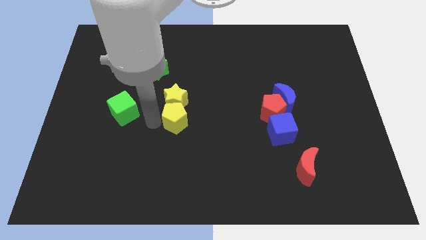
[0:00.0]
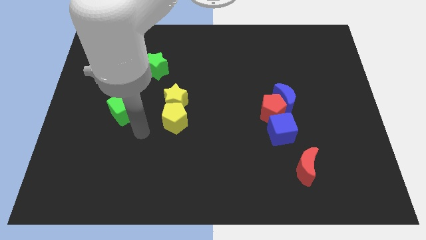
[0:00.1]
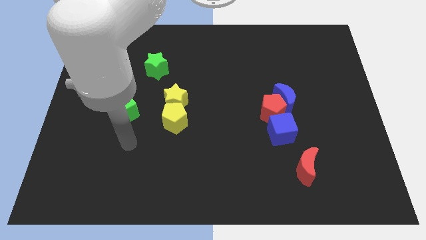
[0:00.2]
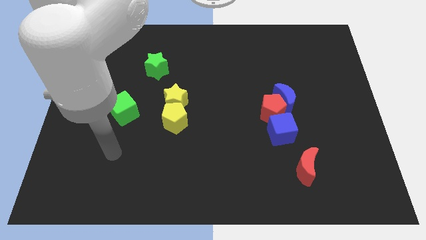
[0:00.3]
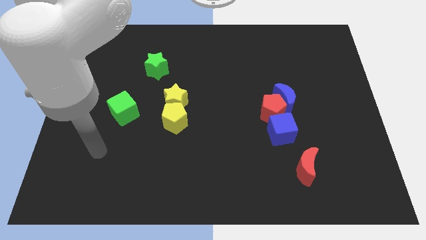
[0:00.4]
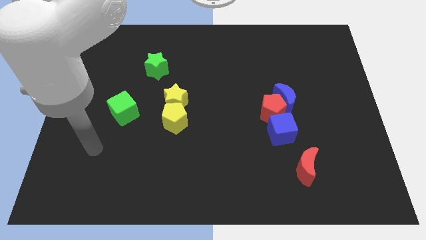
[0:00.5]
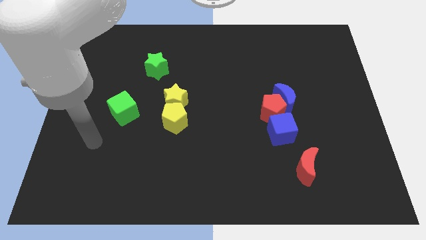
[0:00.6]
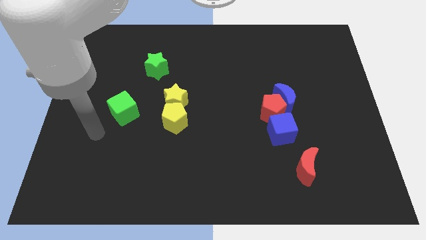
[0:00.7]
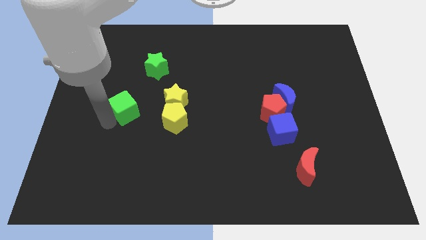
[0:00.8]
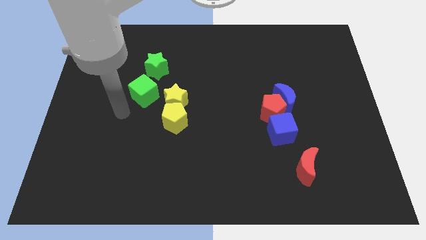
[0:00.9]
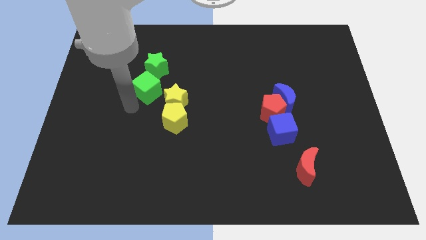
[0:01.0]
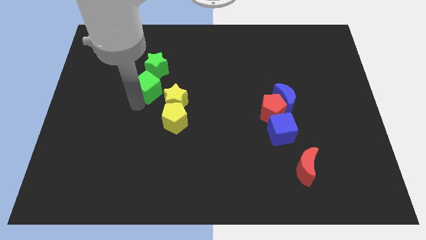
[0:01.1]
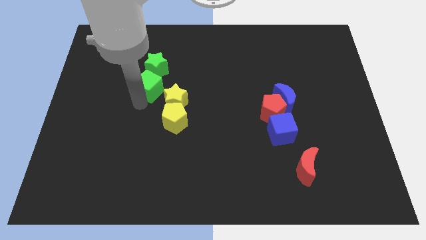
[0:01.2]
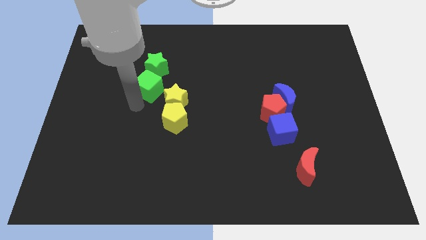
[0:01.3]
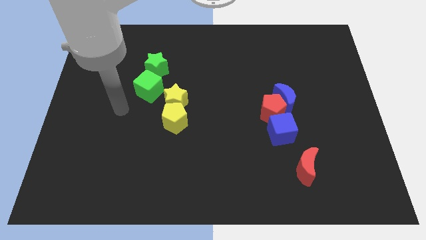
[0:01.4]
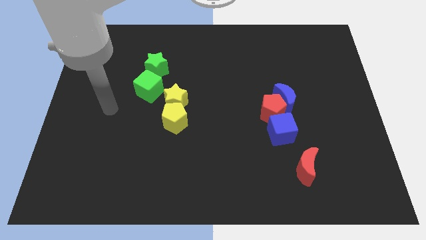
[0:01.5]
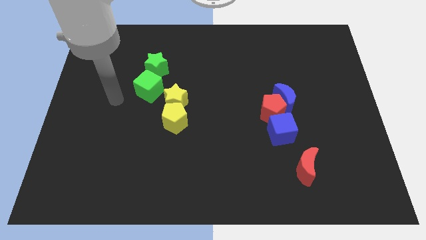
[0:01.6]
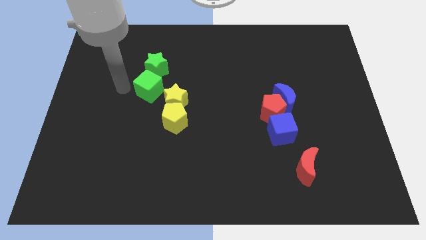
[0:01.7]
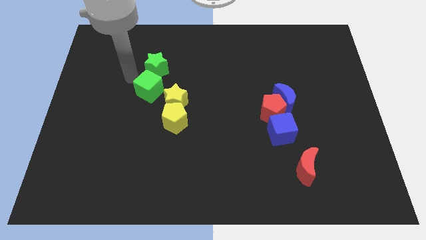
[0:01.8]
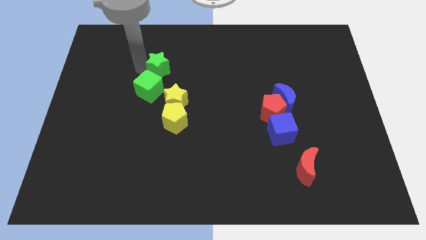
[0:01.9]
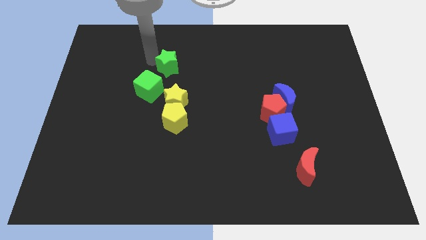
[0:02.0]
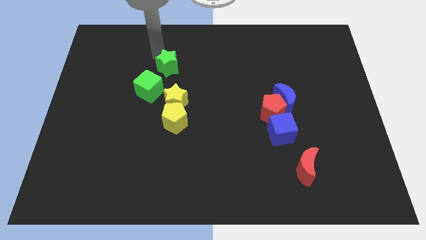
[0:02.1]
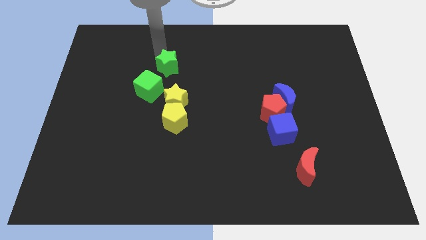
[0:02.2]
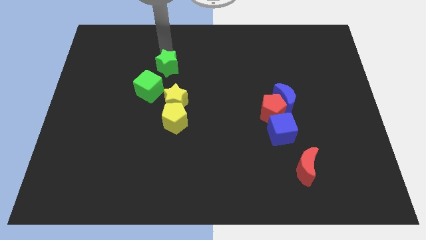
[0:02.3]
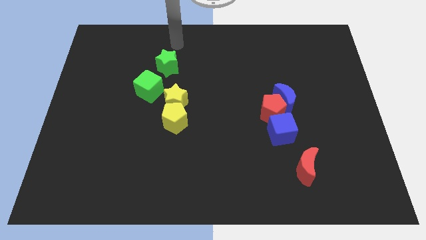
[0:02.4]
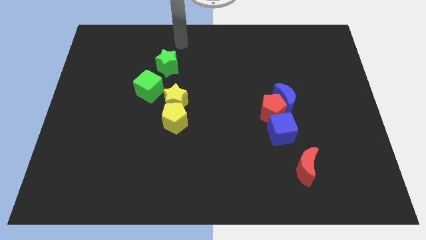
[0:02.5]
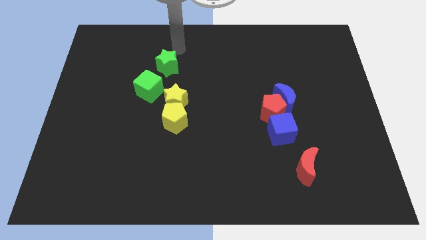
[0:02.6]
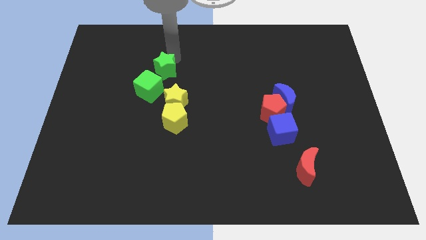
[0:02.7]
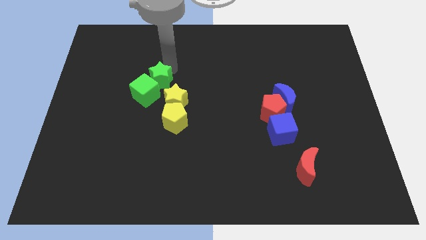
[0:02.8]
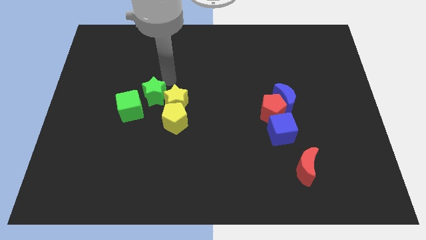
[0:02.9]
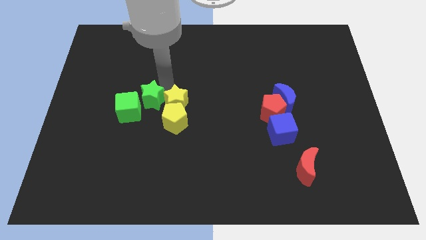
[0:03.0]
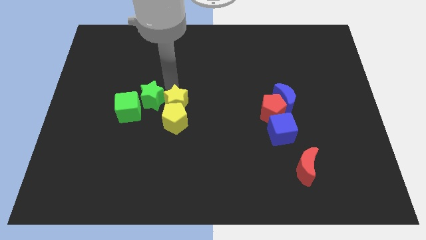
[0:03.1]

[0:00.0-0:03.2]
hit the green cube with the green star

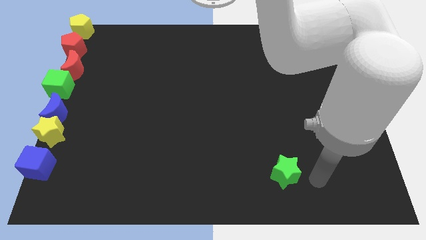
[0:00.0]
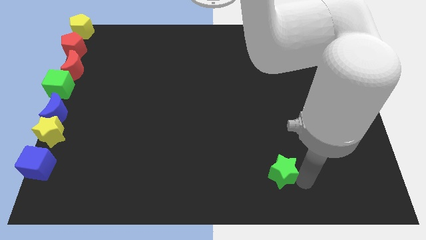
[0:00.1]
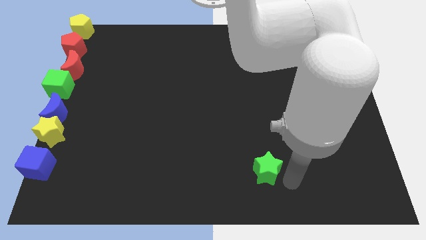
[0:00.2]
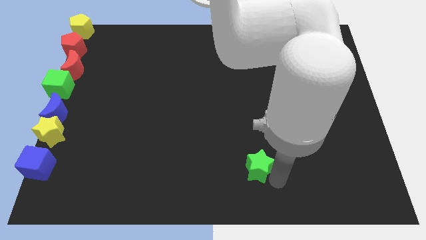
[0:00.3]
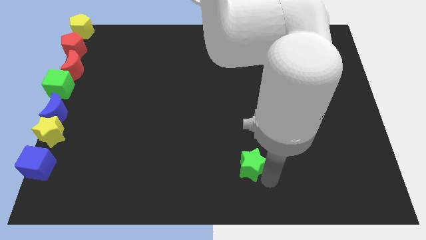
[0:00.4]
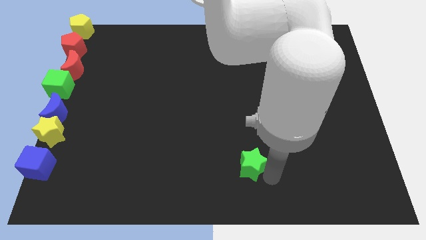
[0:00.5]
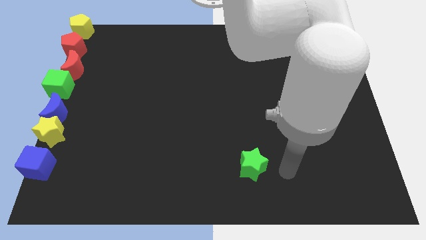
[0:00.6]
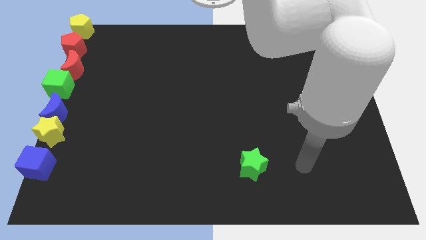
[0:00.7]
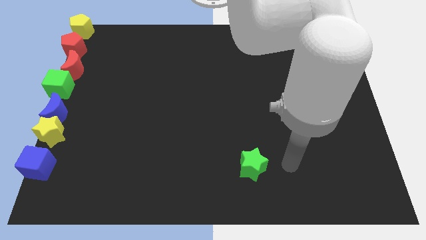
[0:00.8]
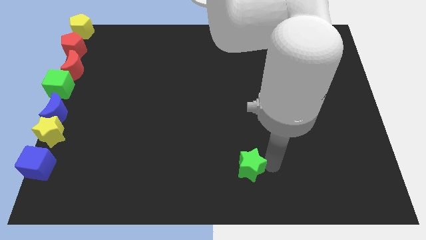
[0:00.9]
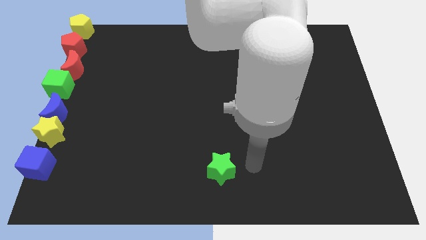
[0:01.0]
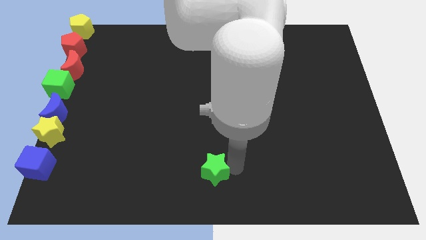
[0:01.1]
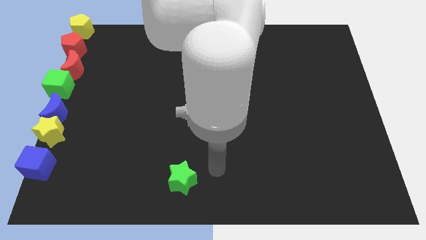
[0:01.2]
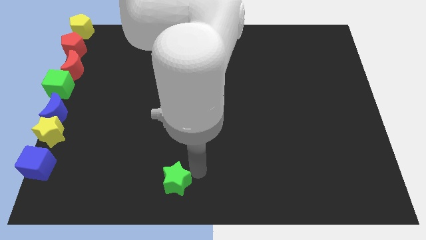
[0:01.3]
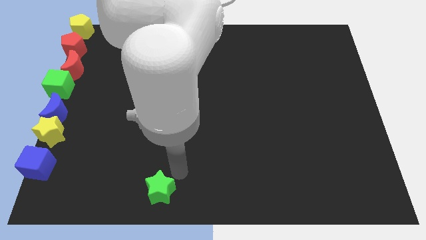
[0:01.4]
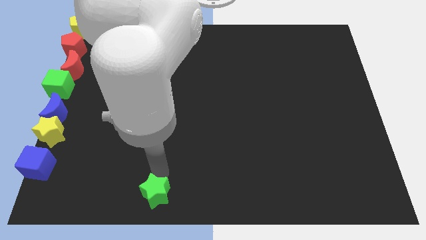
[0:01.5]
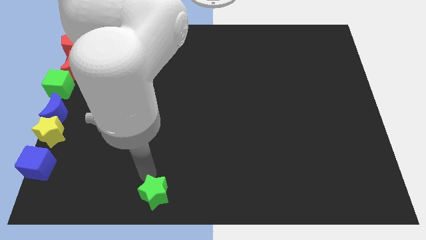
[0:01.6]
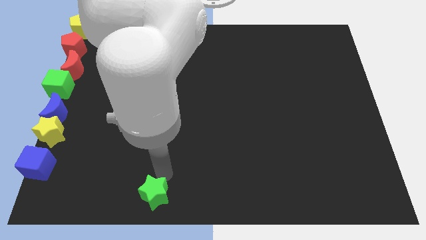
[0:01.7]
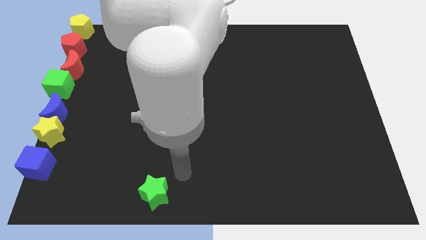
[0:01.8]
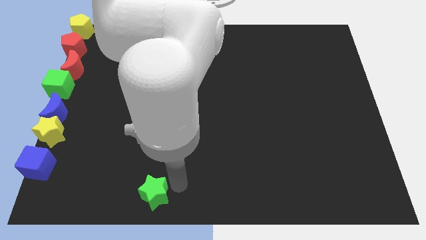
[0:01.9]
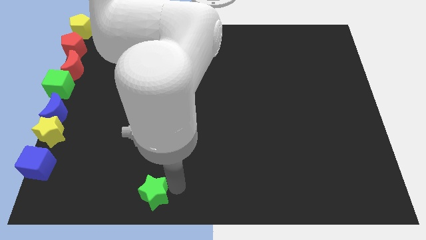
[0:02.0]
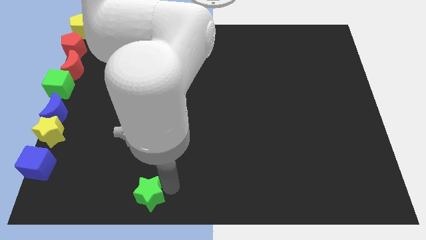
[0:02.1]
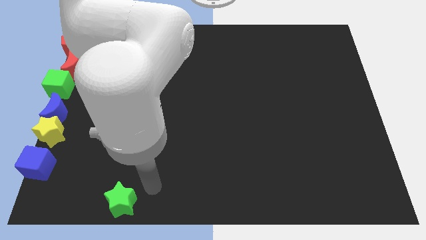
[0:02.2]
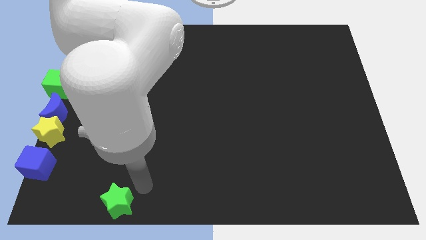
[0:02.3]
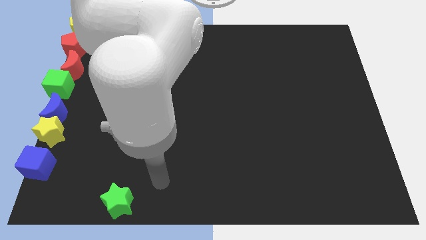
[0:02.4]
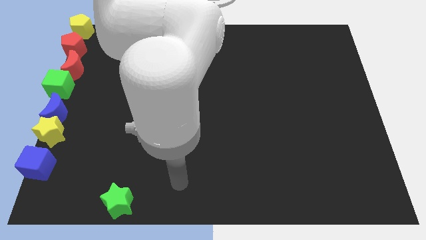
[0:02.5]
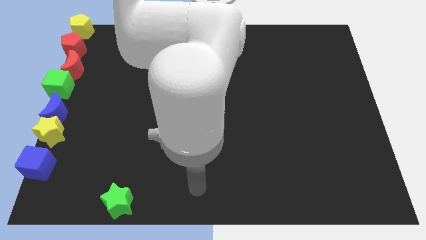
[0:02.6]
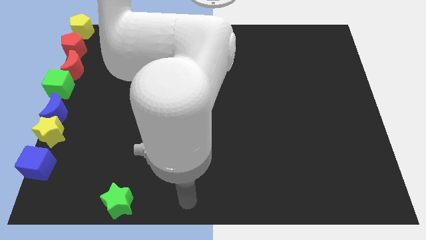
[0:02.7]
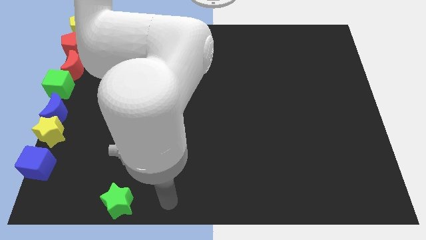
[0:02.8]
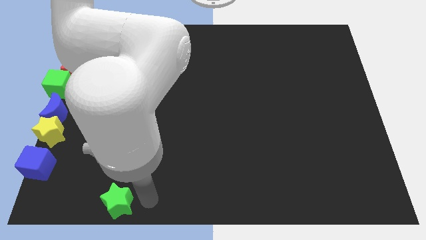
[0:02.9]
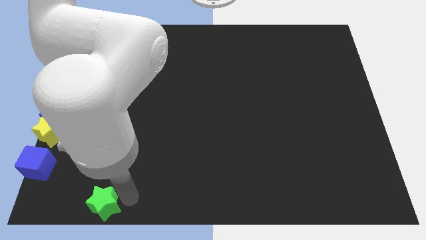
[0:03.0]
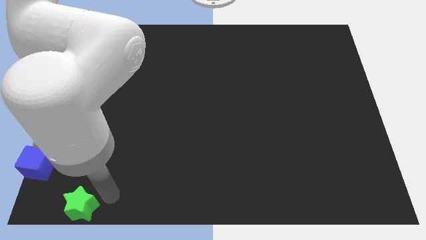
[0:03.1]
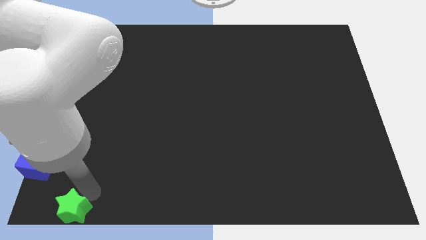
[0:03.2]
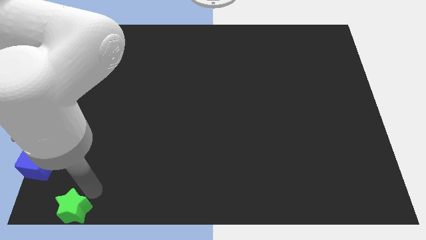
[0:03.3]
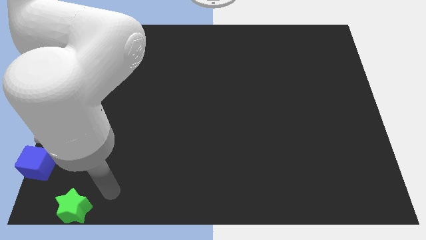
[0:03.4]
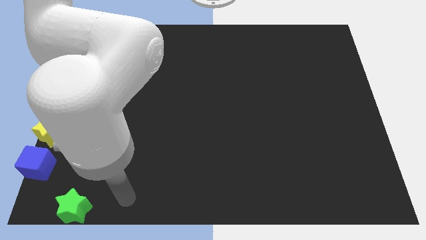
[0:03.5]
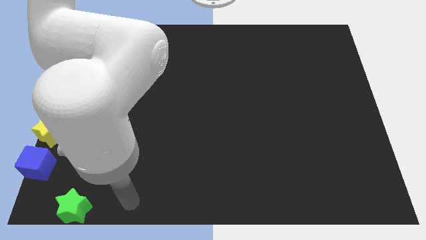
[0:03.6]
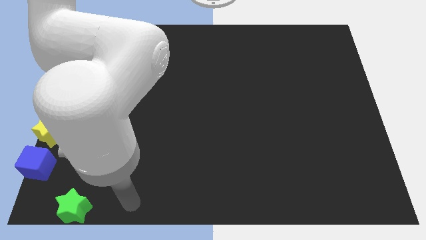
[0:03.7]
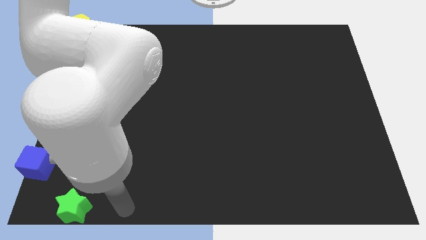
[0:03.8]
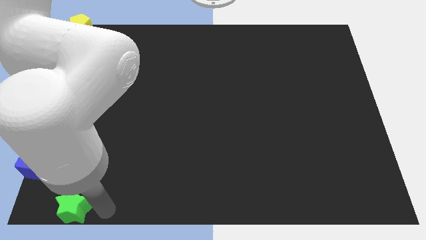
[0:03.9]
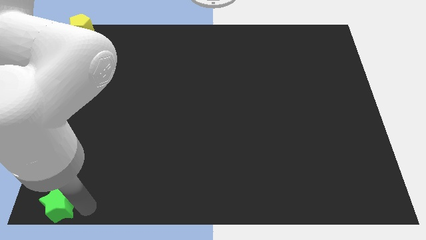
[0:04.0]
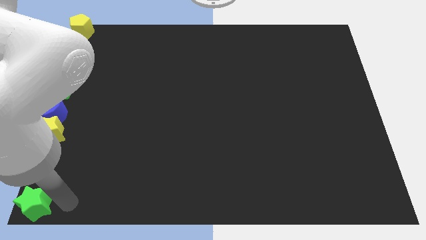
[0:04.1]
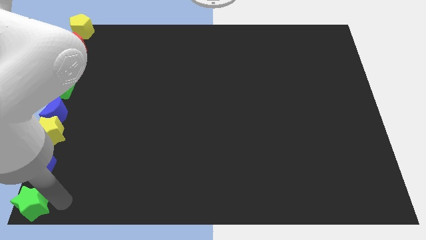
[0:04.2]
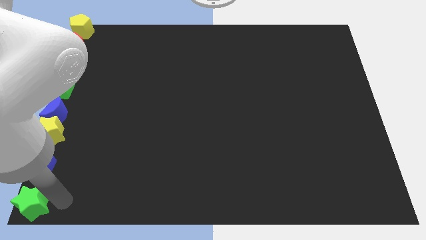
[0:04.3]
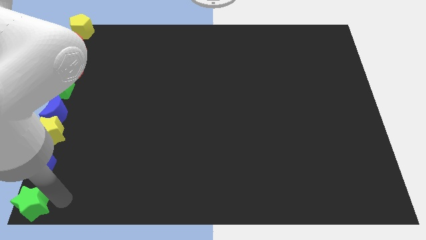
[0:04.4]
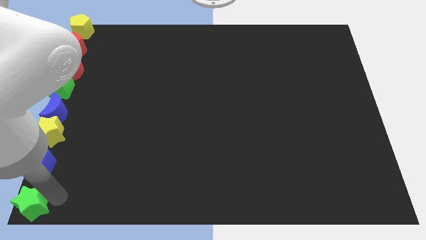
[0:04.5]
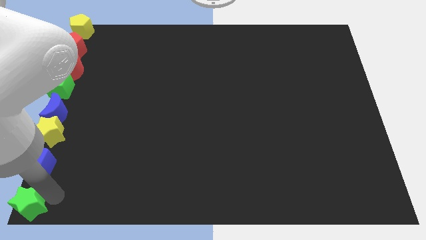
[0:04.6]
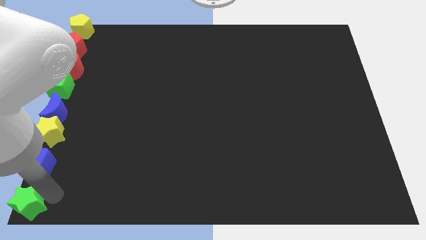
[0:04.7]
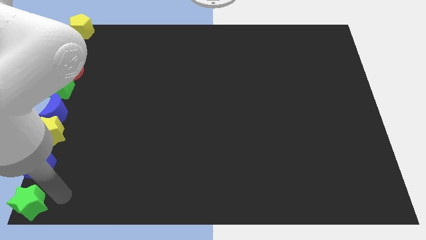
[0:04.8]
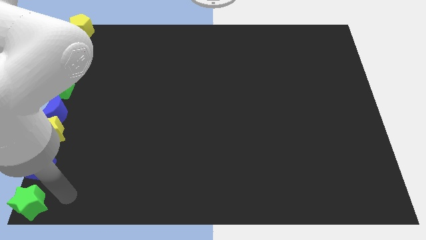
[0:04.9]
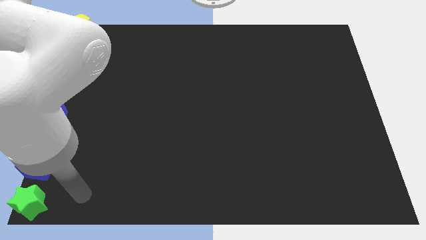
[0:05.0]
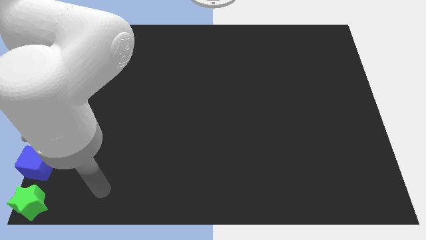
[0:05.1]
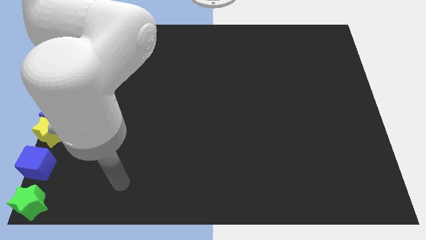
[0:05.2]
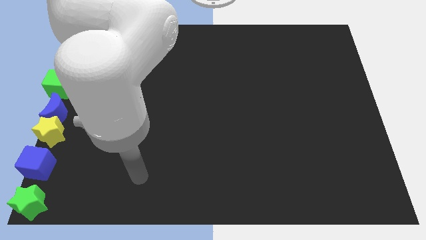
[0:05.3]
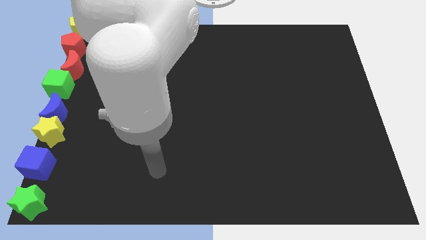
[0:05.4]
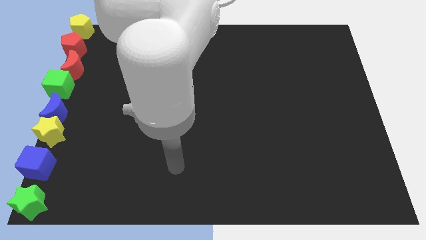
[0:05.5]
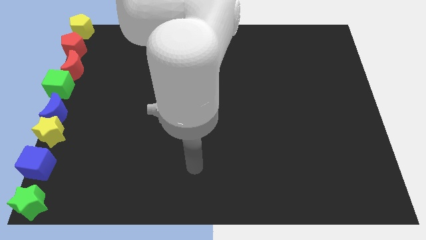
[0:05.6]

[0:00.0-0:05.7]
move the green star to the left bottom corner of the board
